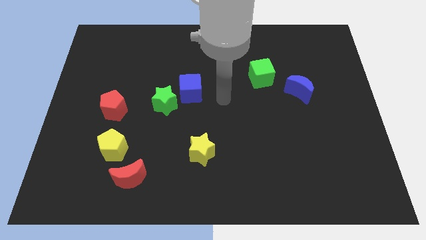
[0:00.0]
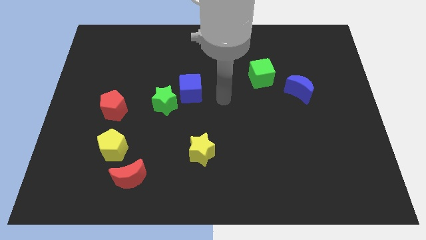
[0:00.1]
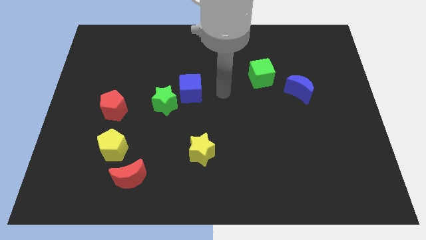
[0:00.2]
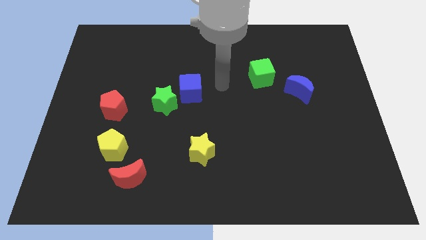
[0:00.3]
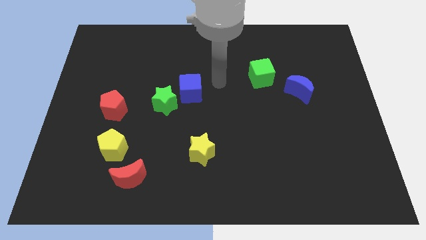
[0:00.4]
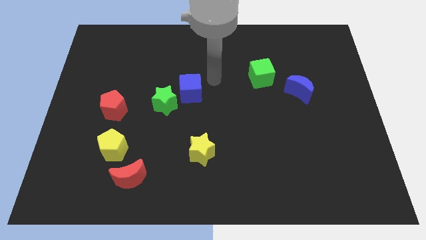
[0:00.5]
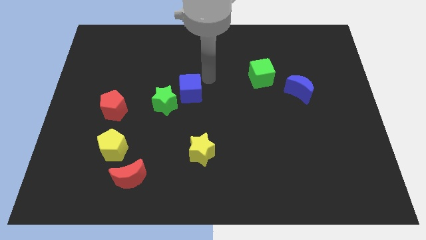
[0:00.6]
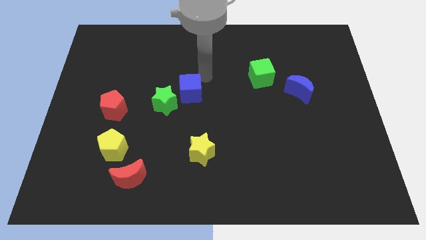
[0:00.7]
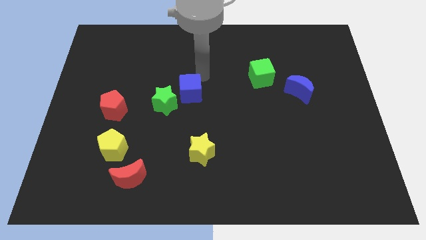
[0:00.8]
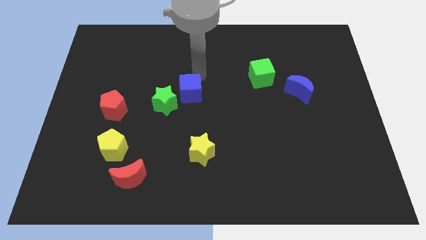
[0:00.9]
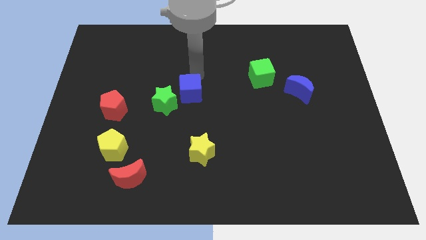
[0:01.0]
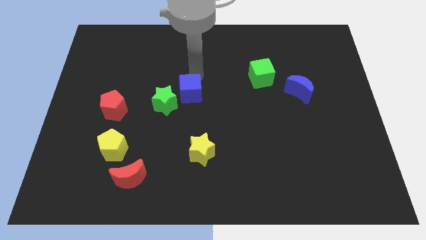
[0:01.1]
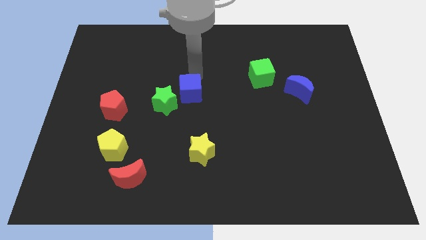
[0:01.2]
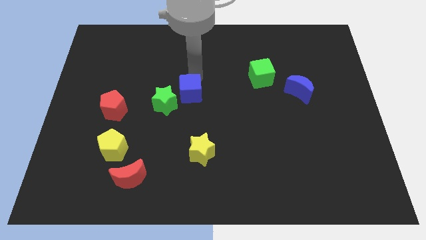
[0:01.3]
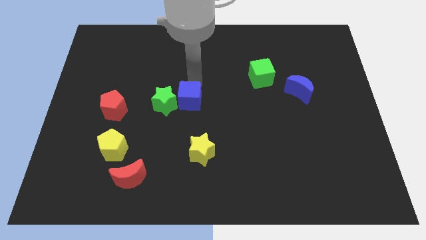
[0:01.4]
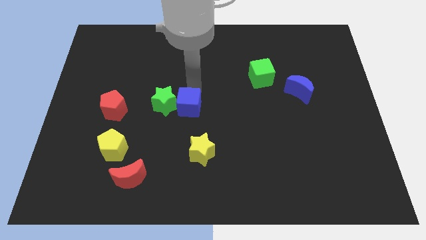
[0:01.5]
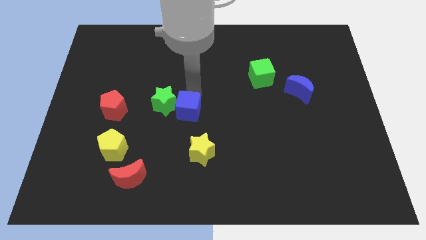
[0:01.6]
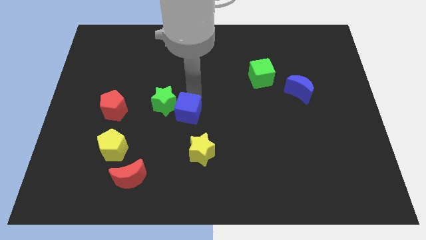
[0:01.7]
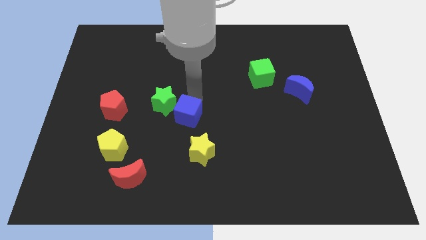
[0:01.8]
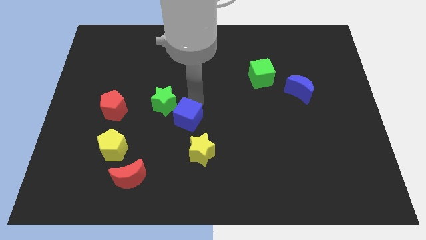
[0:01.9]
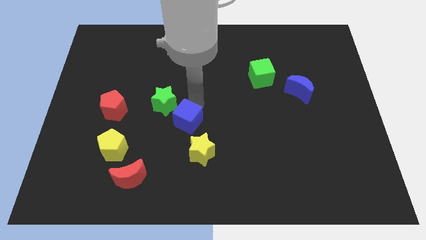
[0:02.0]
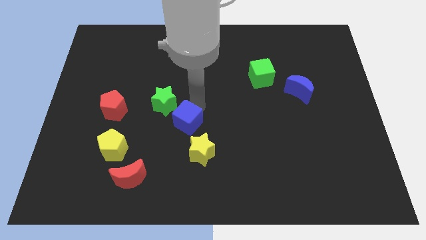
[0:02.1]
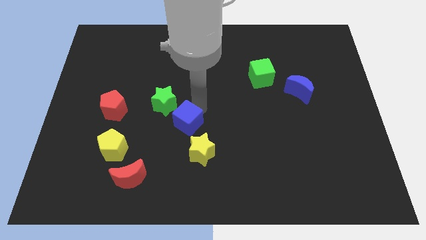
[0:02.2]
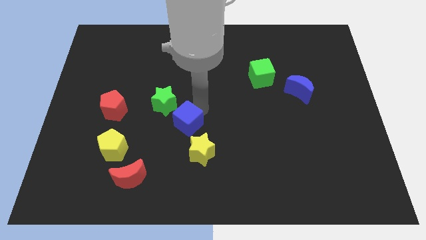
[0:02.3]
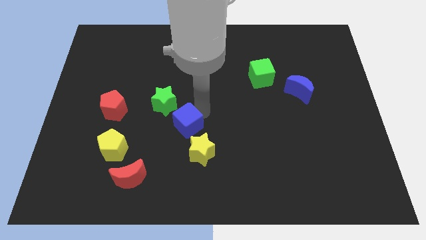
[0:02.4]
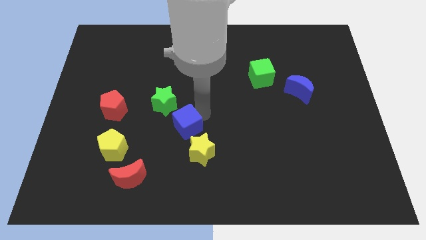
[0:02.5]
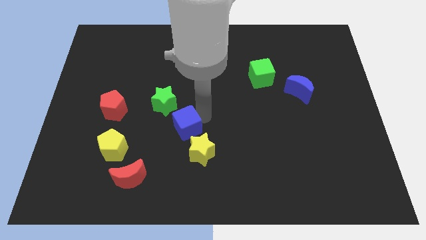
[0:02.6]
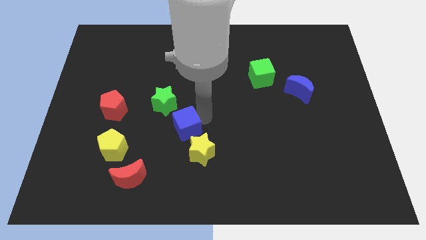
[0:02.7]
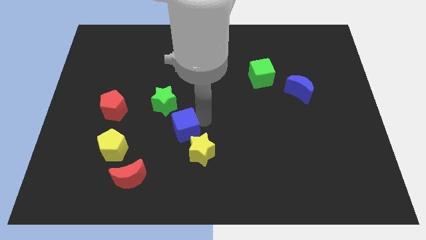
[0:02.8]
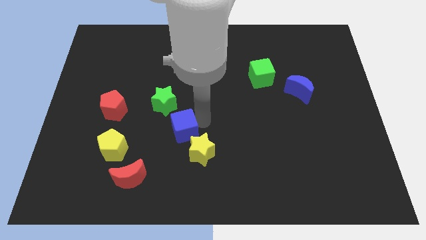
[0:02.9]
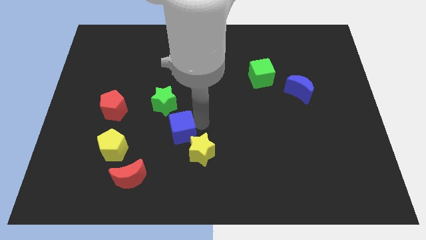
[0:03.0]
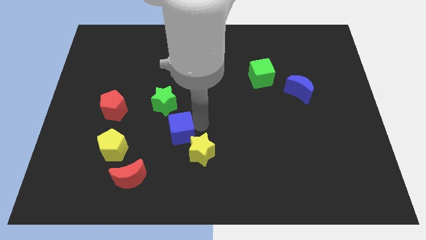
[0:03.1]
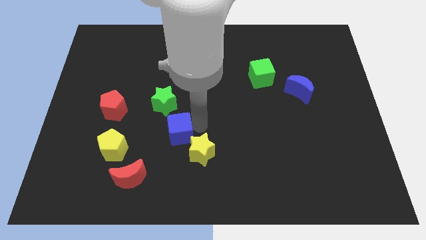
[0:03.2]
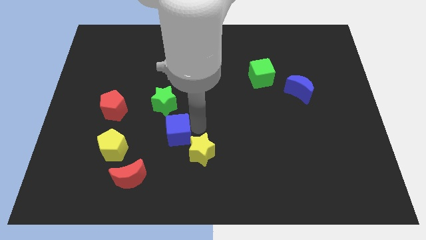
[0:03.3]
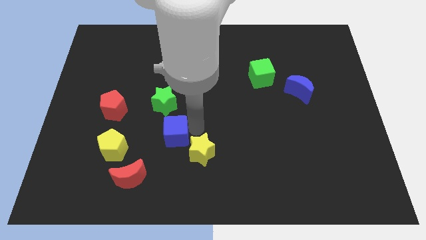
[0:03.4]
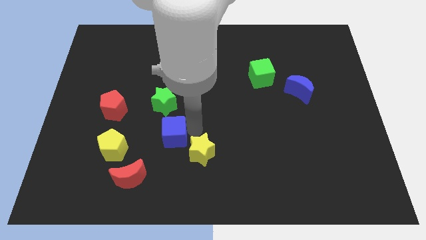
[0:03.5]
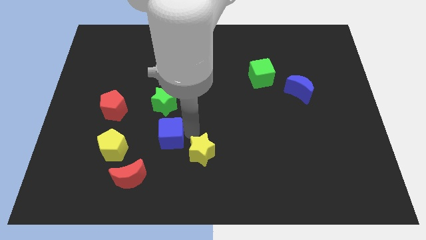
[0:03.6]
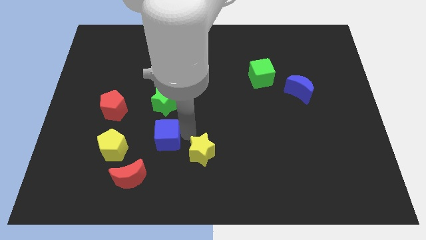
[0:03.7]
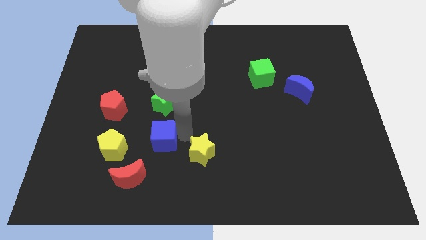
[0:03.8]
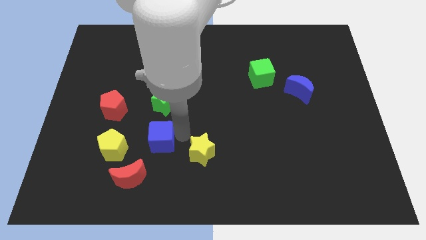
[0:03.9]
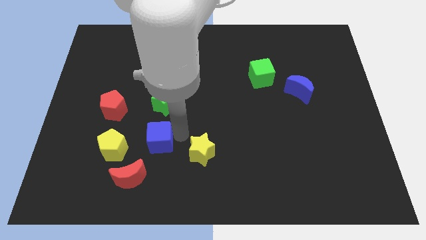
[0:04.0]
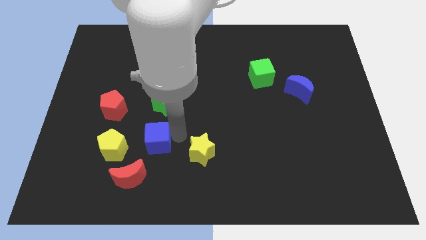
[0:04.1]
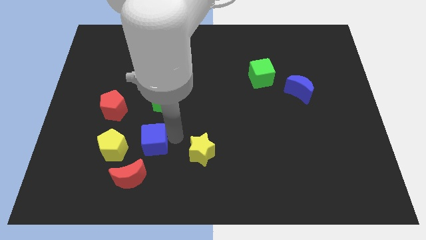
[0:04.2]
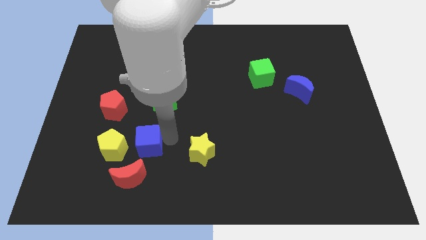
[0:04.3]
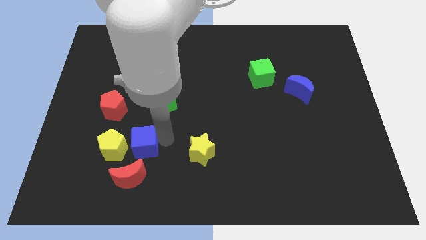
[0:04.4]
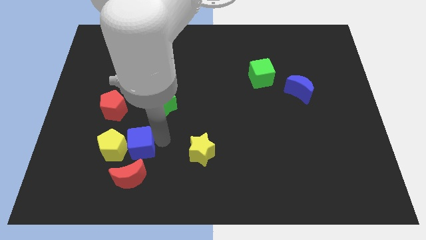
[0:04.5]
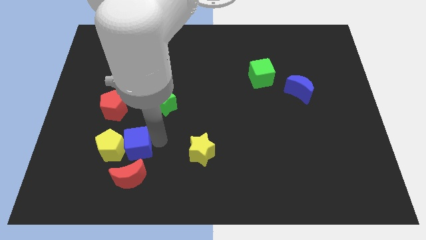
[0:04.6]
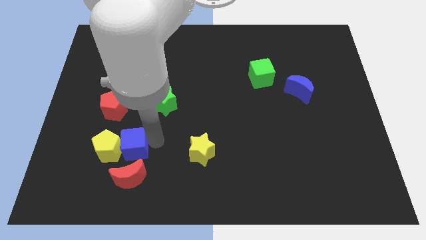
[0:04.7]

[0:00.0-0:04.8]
put the blue cube to the yellow pentagon

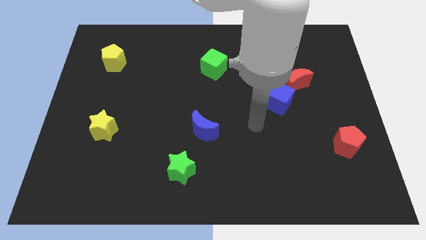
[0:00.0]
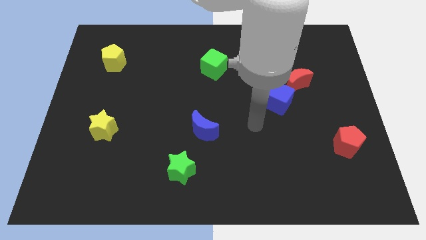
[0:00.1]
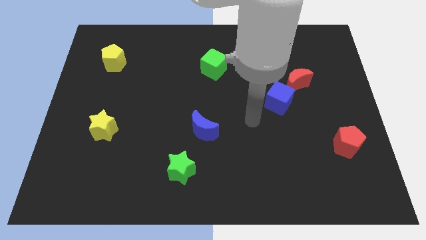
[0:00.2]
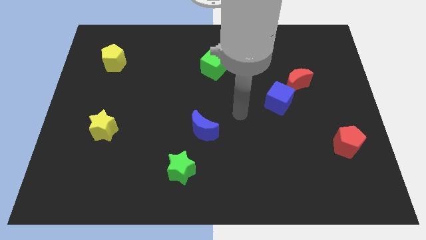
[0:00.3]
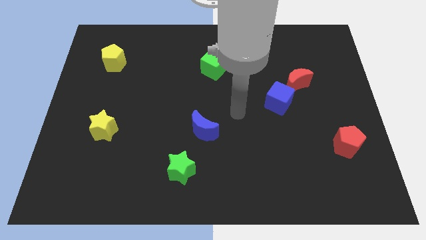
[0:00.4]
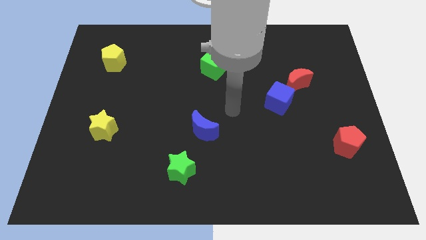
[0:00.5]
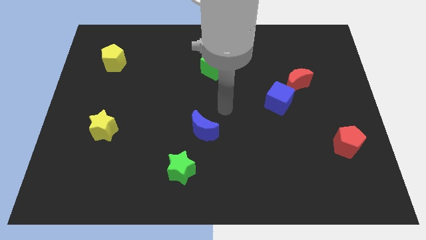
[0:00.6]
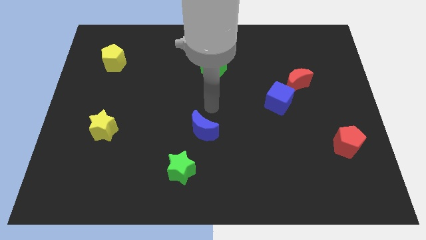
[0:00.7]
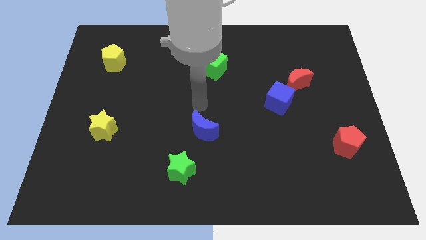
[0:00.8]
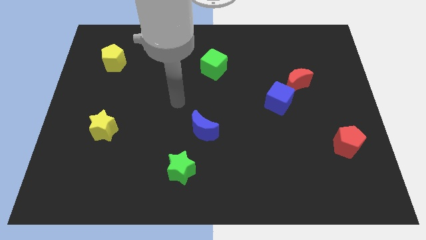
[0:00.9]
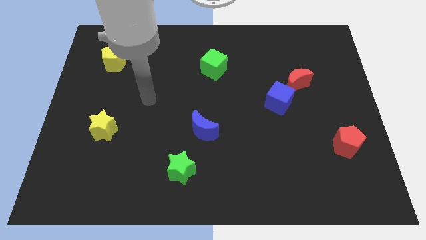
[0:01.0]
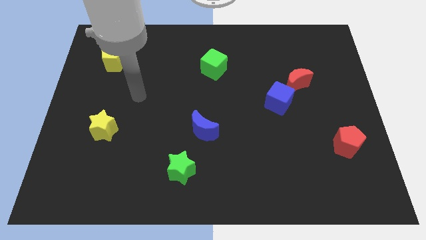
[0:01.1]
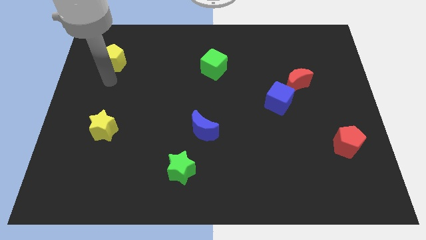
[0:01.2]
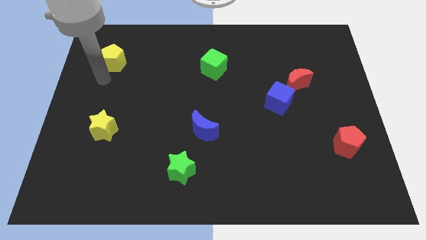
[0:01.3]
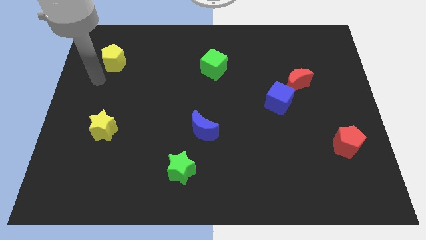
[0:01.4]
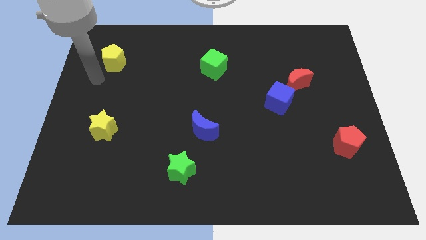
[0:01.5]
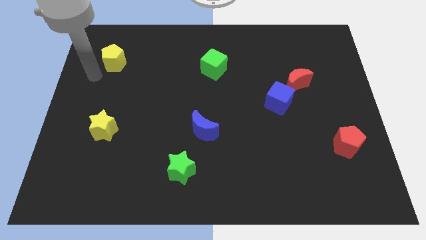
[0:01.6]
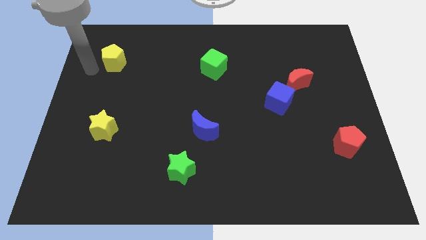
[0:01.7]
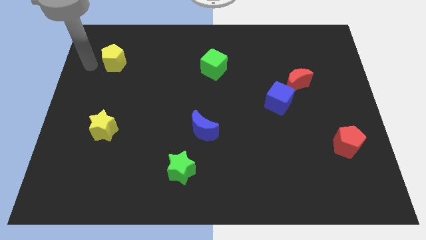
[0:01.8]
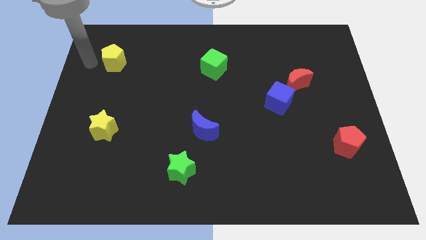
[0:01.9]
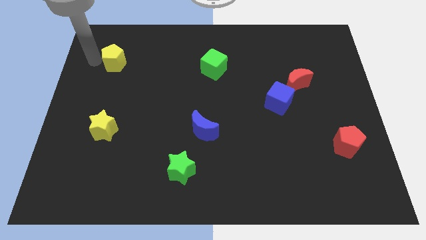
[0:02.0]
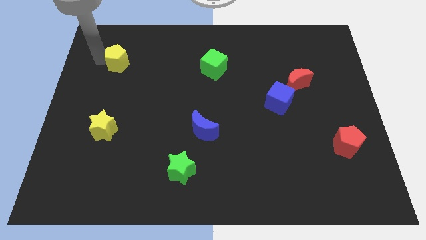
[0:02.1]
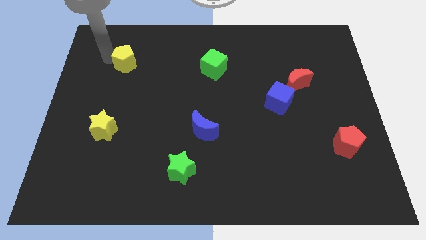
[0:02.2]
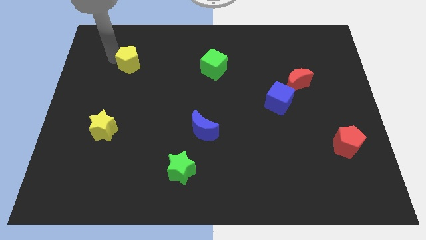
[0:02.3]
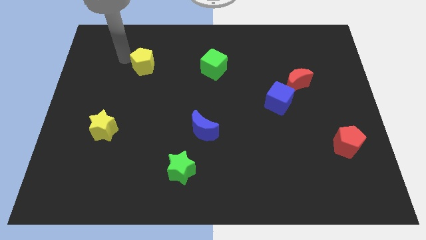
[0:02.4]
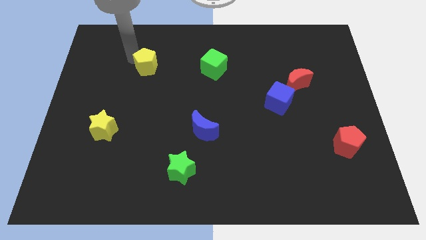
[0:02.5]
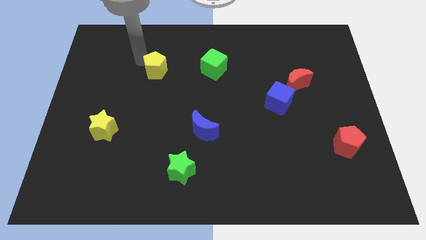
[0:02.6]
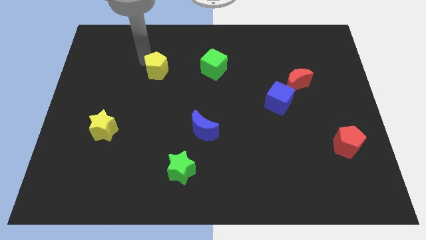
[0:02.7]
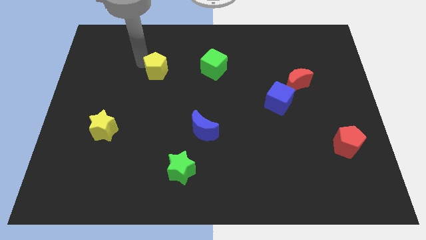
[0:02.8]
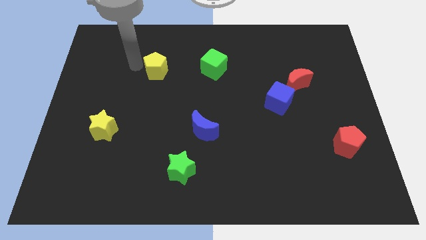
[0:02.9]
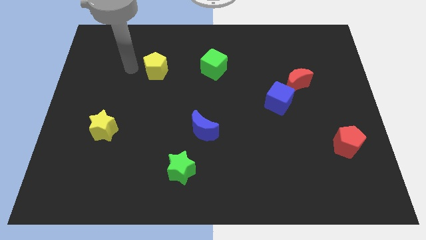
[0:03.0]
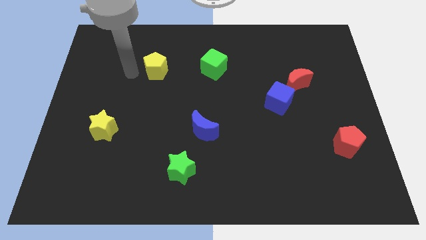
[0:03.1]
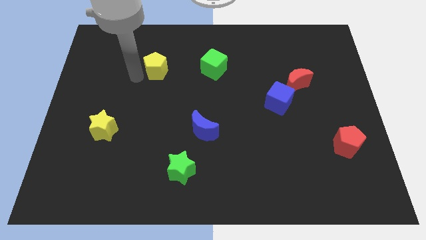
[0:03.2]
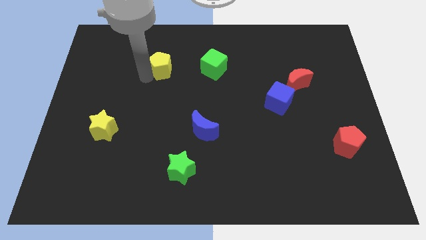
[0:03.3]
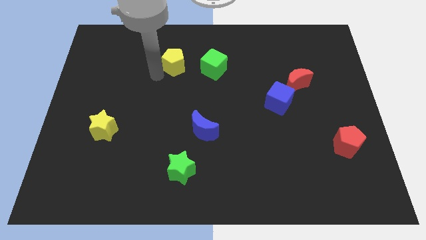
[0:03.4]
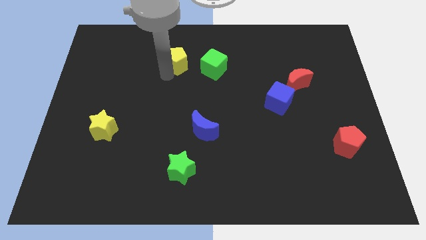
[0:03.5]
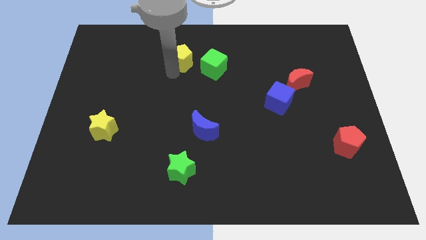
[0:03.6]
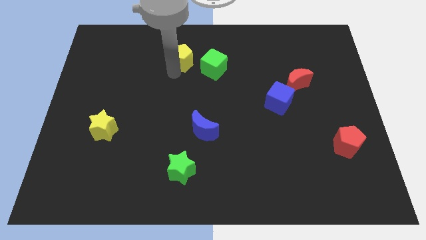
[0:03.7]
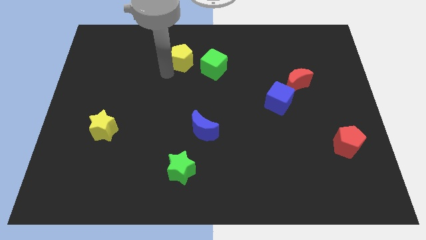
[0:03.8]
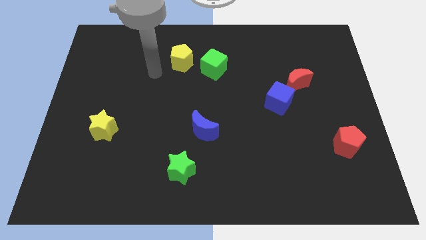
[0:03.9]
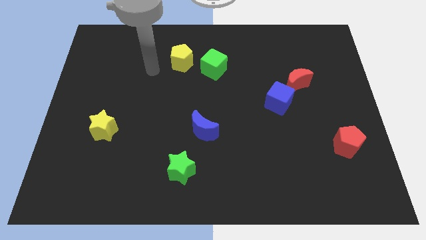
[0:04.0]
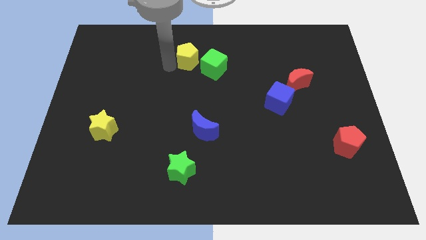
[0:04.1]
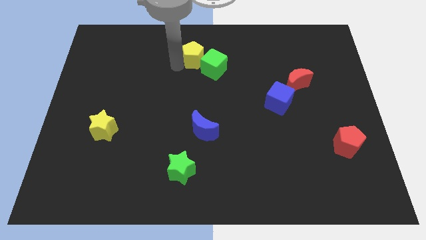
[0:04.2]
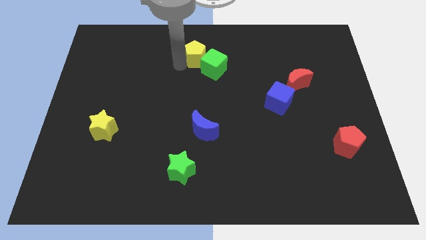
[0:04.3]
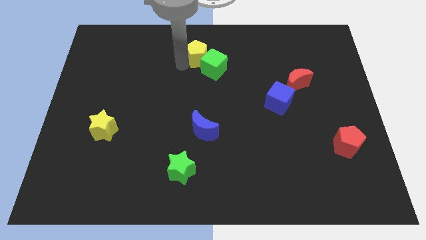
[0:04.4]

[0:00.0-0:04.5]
move the yellow pentagon close to the green cube
